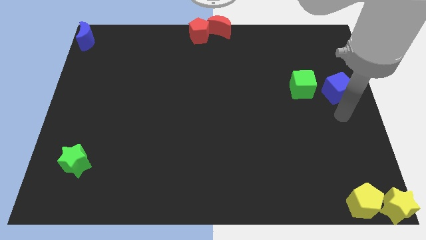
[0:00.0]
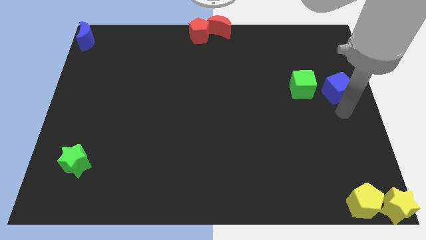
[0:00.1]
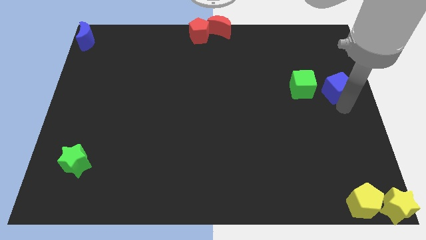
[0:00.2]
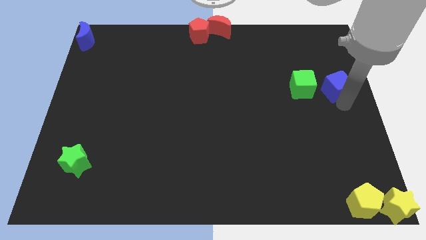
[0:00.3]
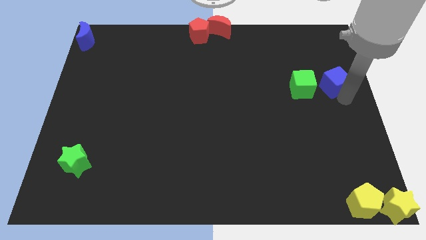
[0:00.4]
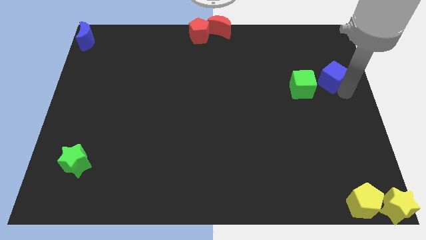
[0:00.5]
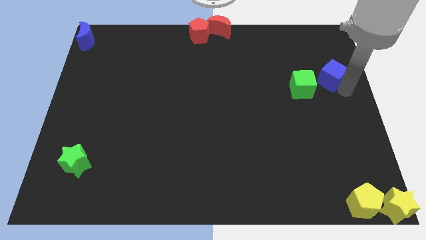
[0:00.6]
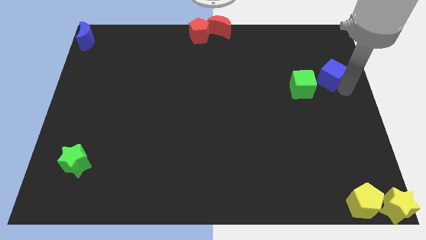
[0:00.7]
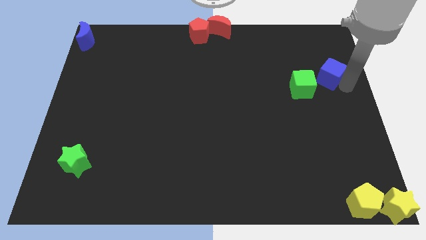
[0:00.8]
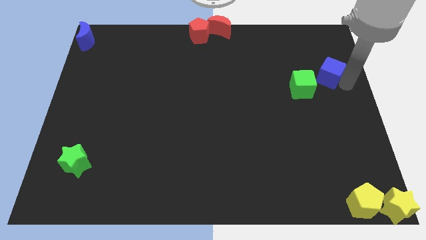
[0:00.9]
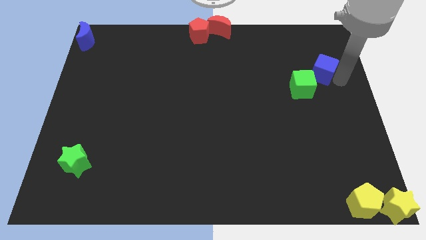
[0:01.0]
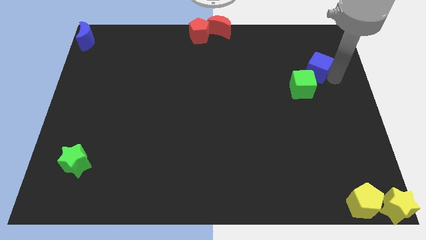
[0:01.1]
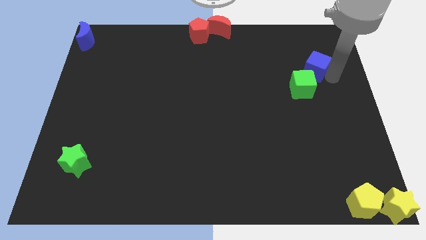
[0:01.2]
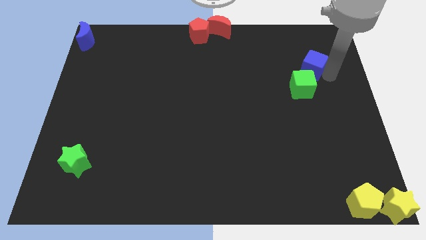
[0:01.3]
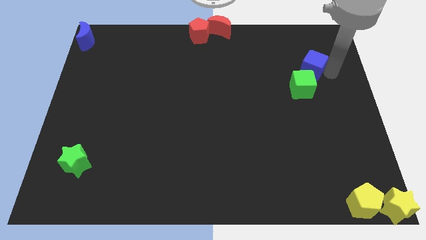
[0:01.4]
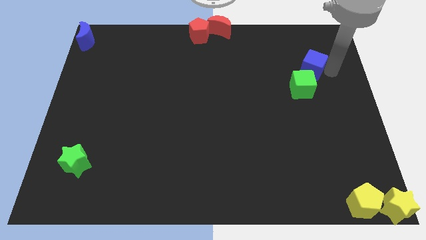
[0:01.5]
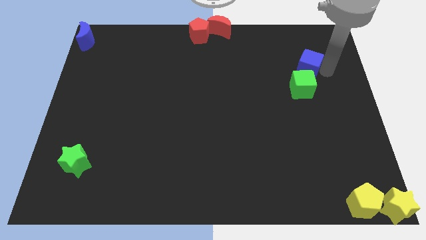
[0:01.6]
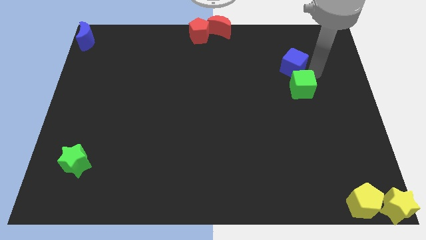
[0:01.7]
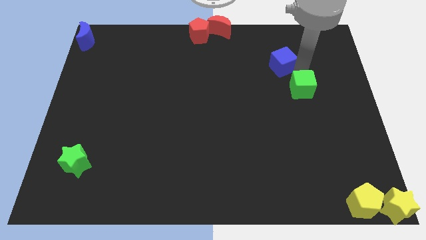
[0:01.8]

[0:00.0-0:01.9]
place the blue cube above the green cube

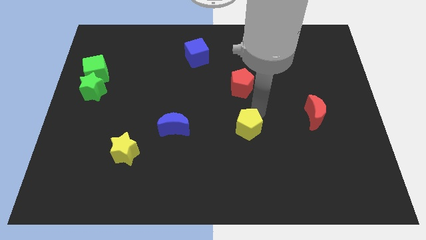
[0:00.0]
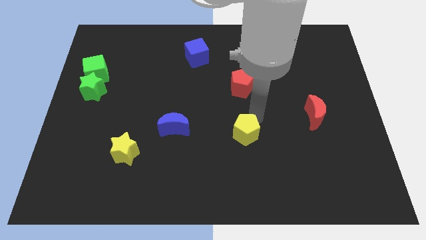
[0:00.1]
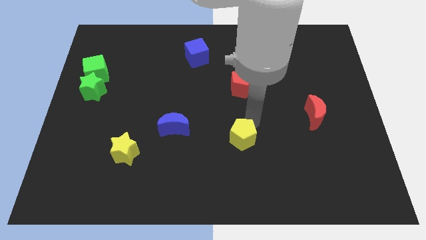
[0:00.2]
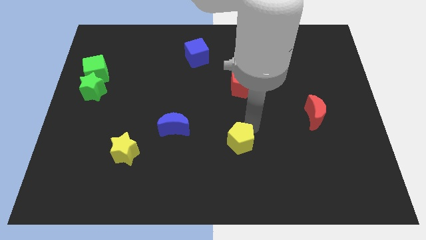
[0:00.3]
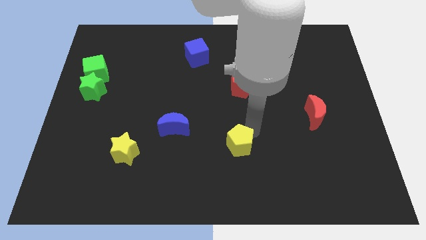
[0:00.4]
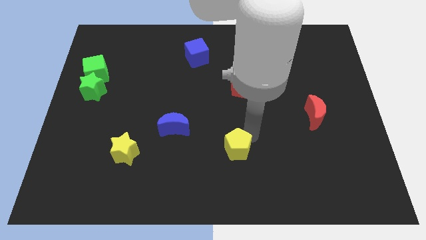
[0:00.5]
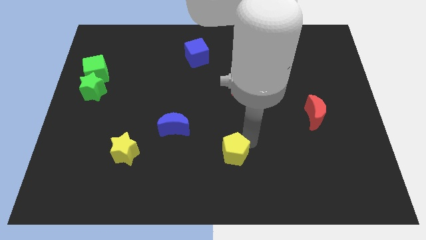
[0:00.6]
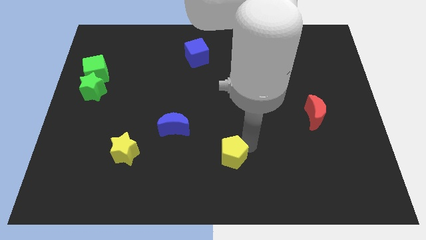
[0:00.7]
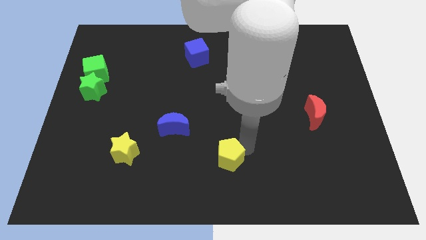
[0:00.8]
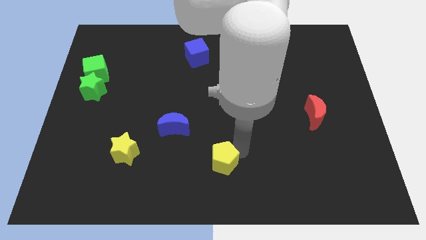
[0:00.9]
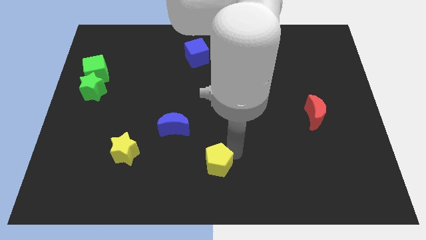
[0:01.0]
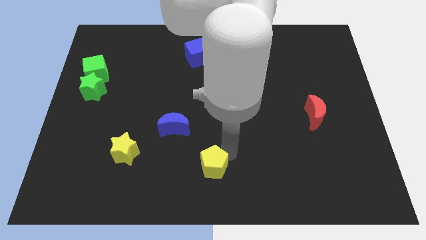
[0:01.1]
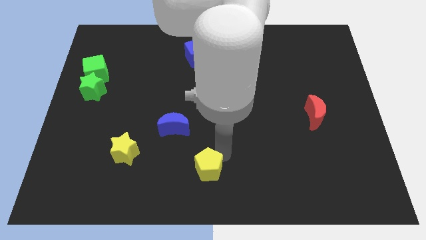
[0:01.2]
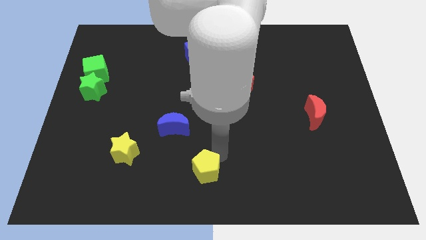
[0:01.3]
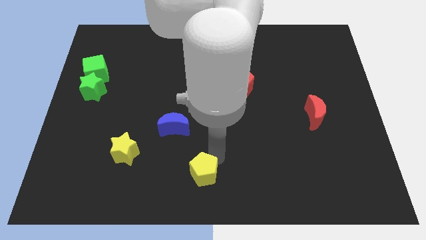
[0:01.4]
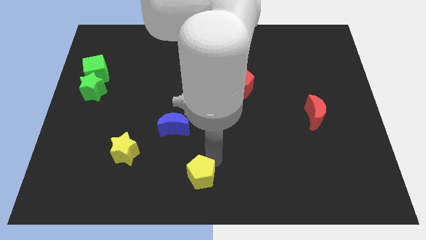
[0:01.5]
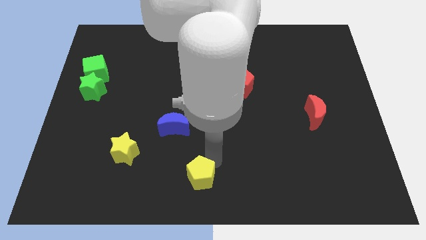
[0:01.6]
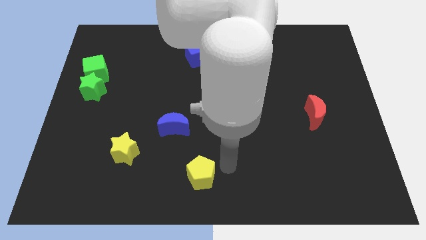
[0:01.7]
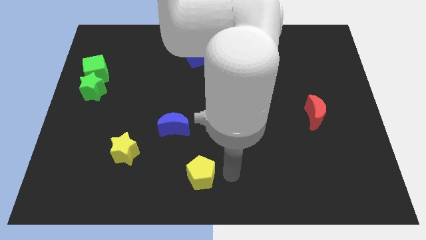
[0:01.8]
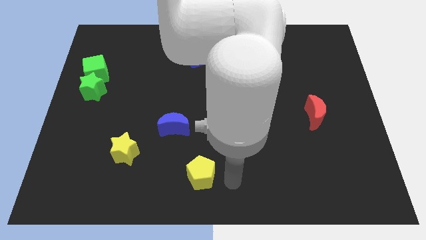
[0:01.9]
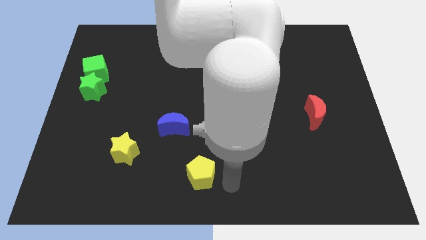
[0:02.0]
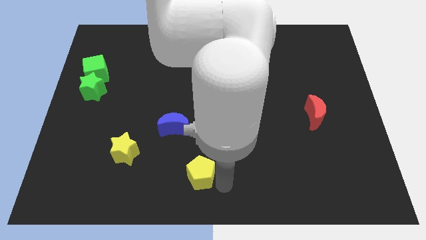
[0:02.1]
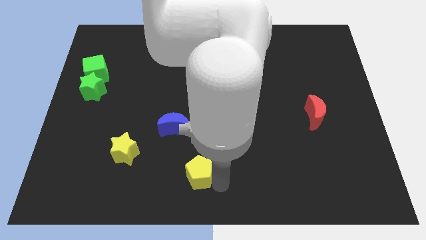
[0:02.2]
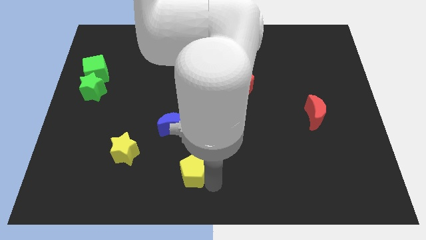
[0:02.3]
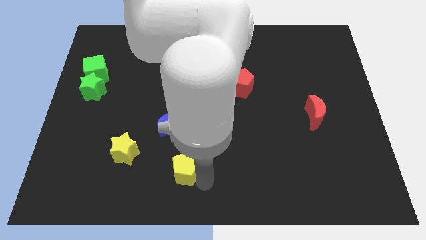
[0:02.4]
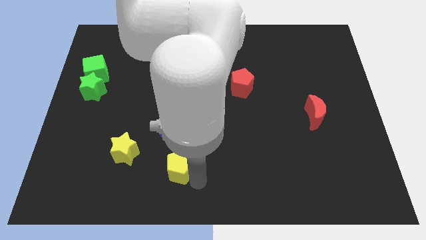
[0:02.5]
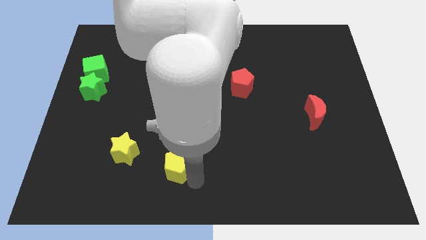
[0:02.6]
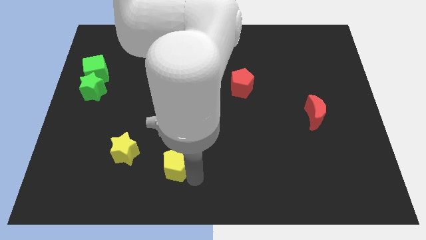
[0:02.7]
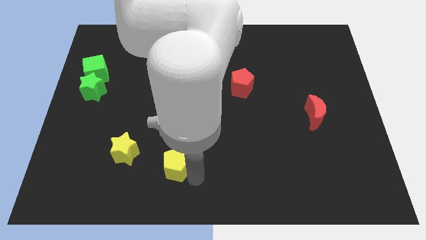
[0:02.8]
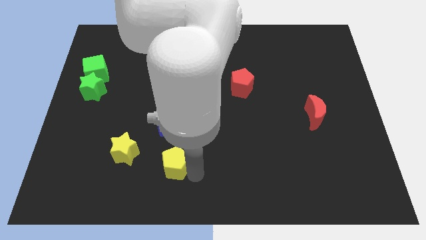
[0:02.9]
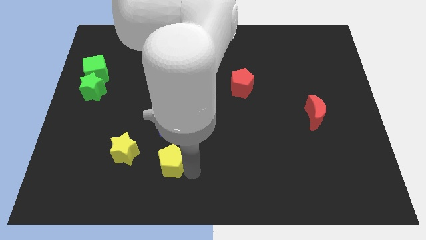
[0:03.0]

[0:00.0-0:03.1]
push the yellow pentagon to the bottom of the blue crescent

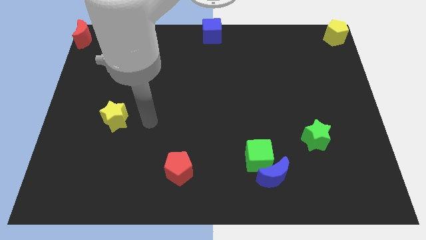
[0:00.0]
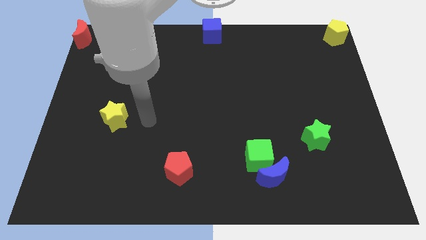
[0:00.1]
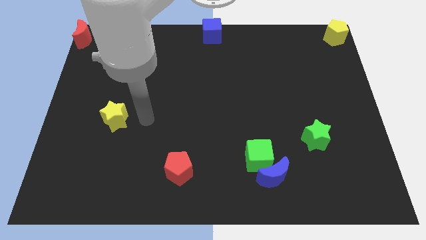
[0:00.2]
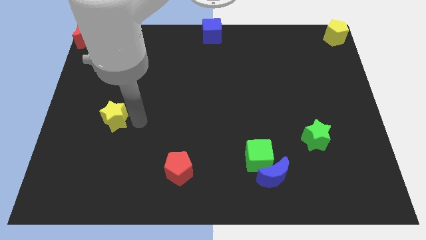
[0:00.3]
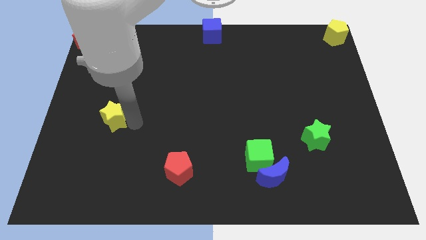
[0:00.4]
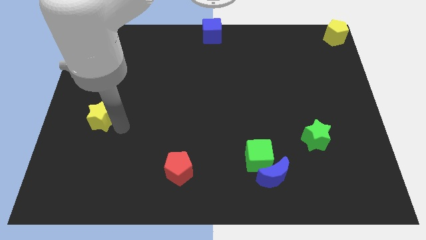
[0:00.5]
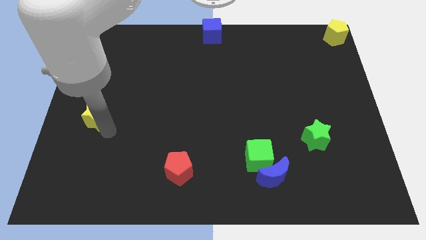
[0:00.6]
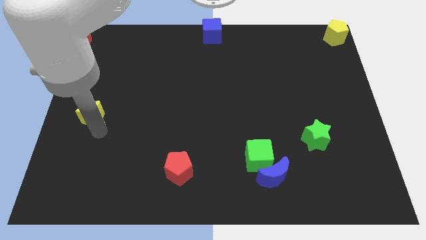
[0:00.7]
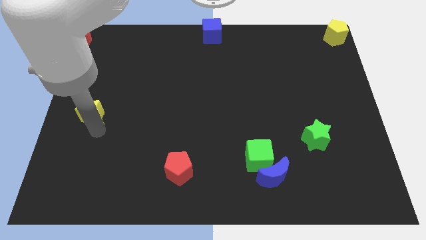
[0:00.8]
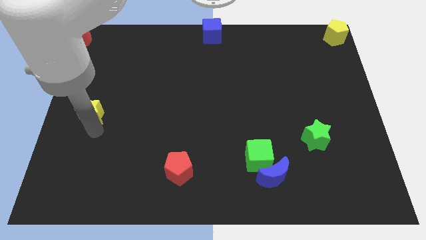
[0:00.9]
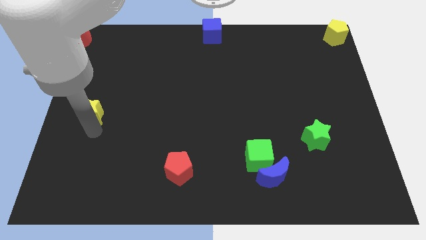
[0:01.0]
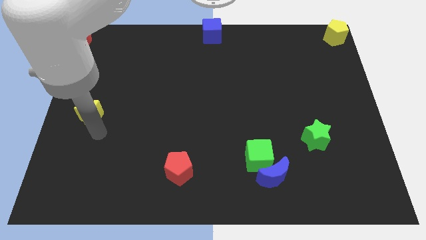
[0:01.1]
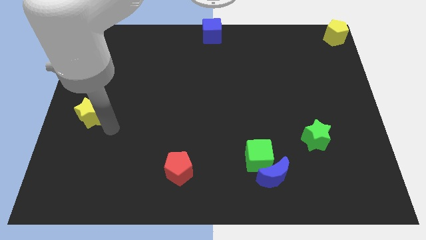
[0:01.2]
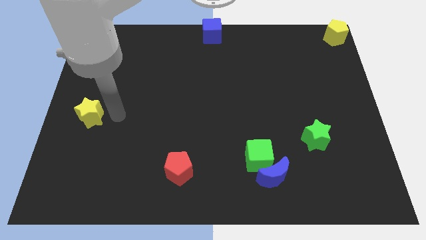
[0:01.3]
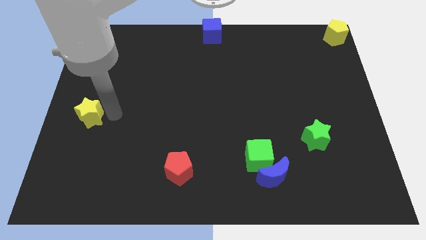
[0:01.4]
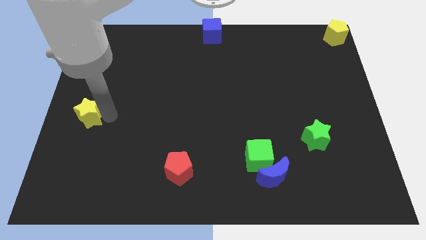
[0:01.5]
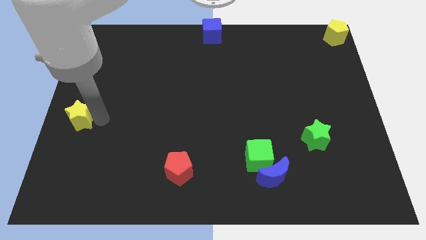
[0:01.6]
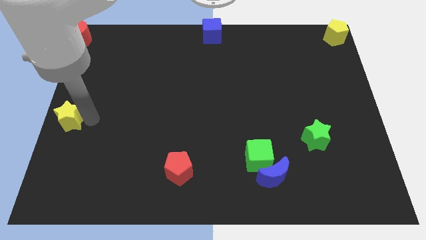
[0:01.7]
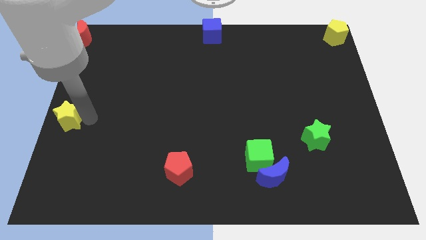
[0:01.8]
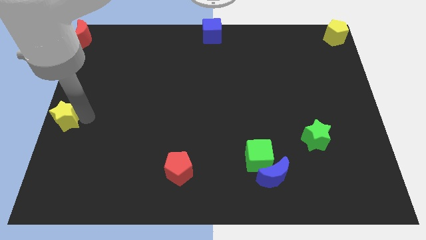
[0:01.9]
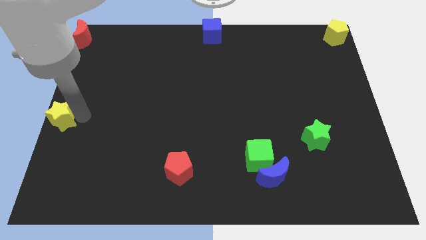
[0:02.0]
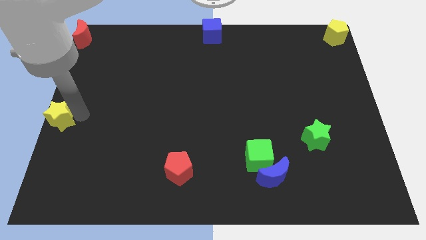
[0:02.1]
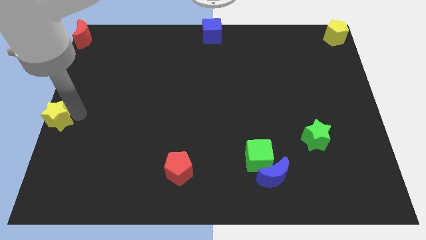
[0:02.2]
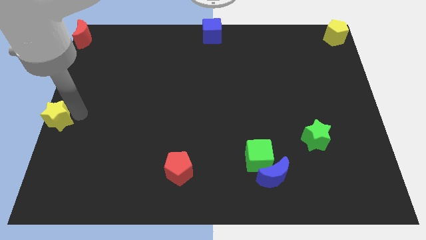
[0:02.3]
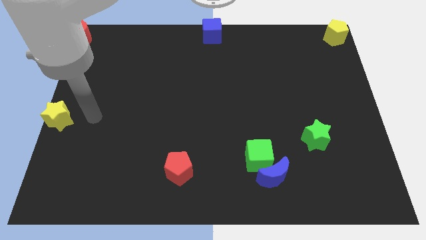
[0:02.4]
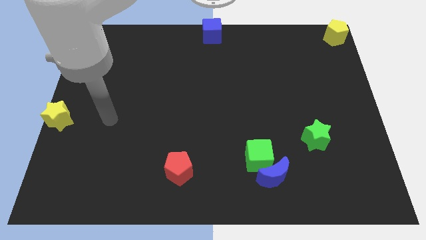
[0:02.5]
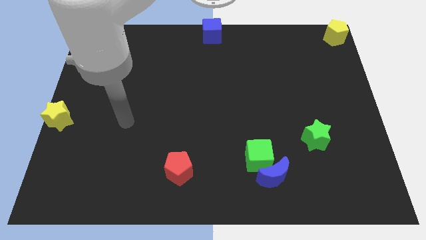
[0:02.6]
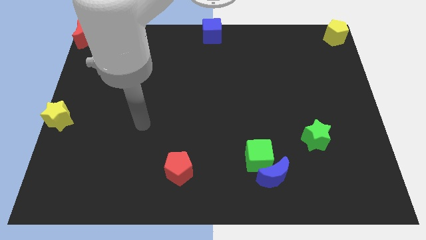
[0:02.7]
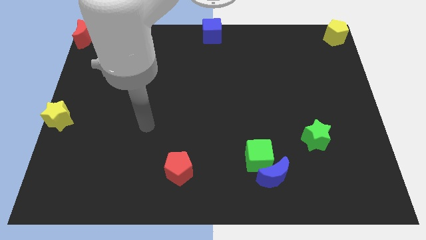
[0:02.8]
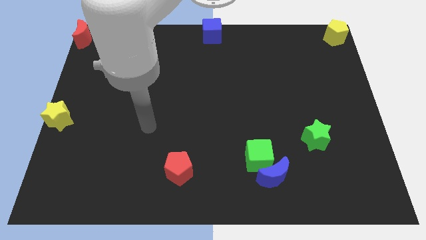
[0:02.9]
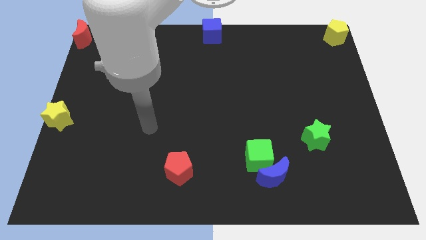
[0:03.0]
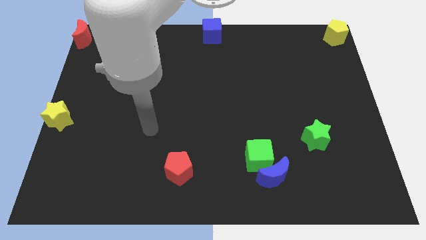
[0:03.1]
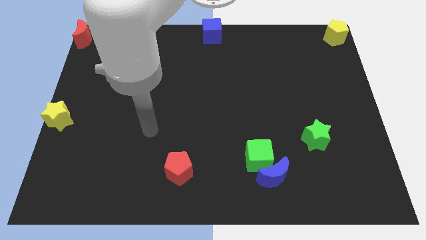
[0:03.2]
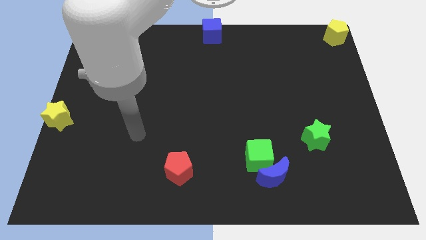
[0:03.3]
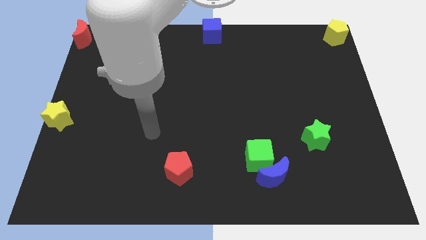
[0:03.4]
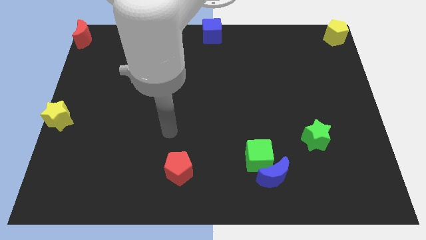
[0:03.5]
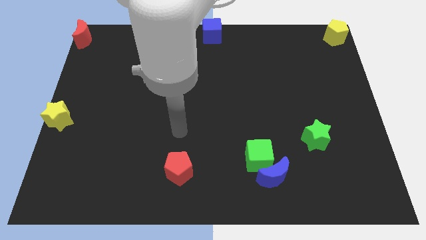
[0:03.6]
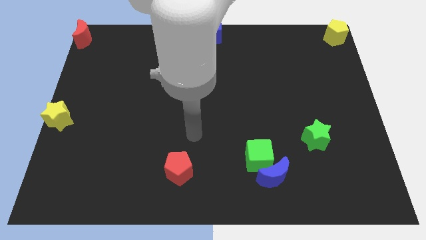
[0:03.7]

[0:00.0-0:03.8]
push the yellow star to the center left
